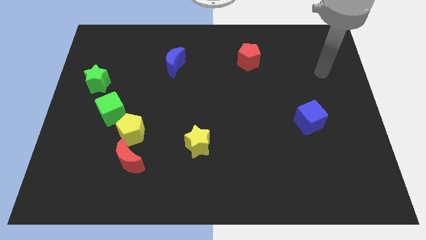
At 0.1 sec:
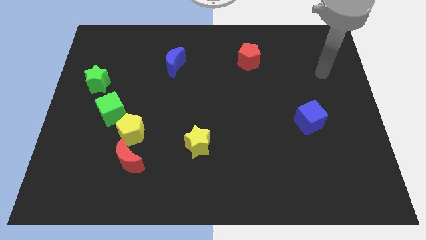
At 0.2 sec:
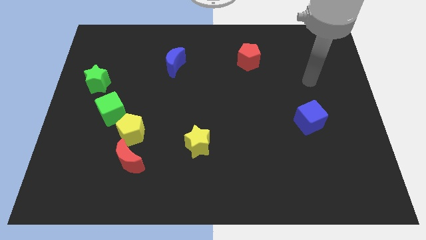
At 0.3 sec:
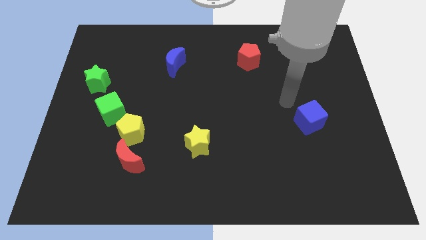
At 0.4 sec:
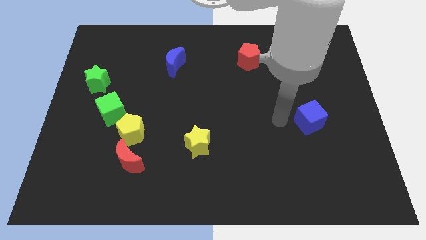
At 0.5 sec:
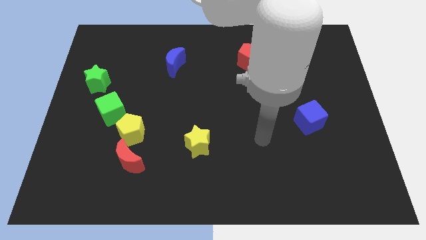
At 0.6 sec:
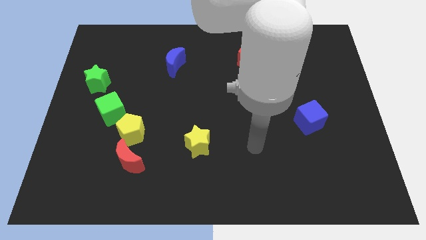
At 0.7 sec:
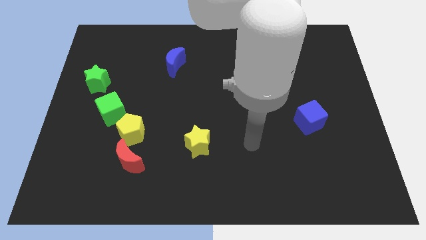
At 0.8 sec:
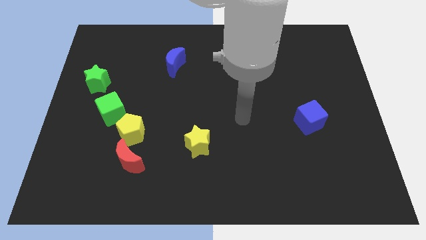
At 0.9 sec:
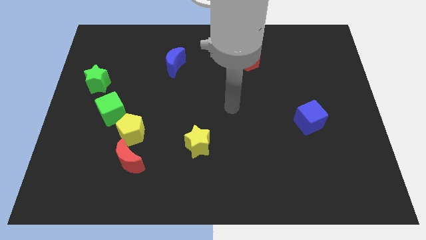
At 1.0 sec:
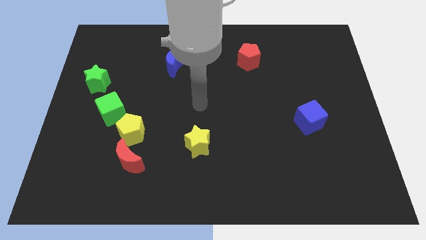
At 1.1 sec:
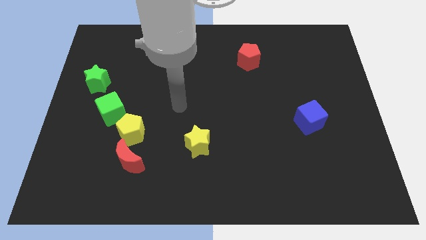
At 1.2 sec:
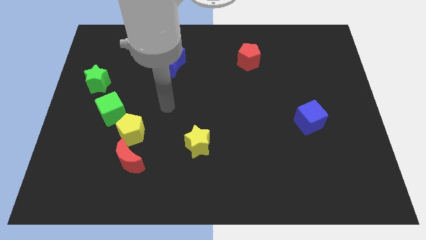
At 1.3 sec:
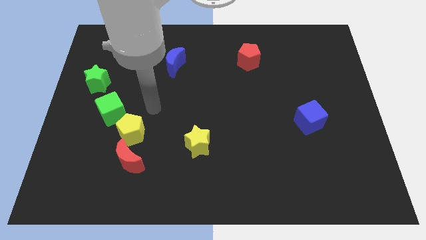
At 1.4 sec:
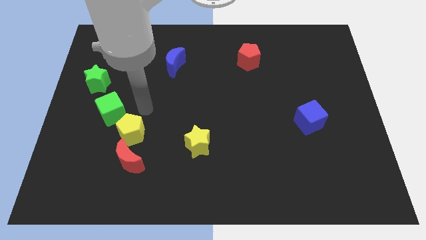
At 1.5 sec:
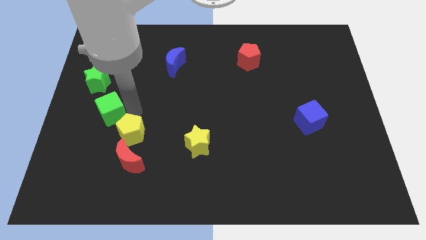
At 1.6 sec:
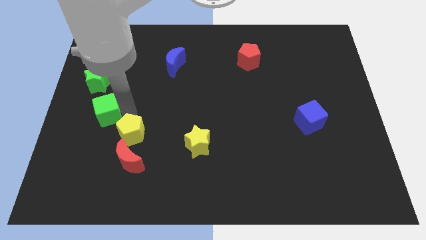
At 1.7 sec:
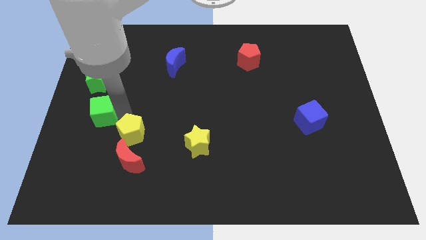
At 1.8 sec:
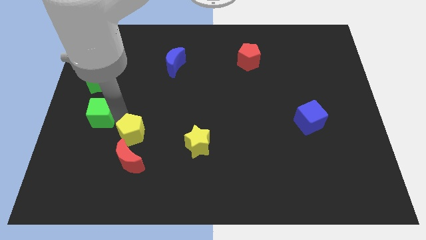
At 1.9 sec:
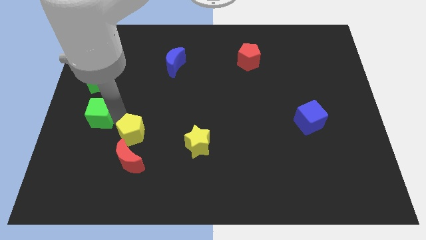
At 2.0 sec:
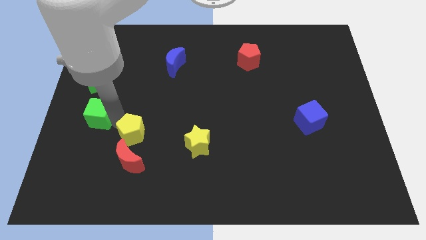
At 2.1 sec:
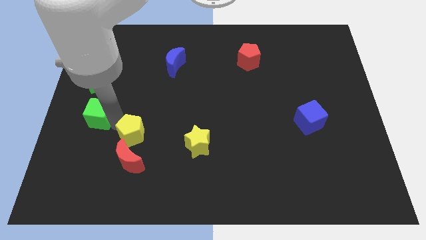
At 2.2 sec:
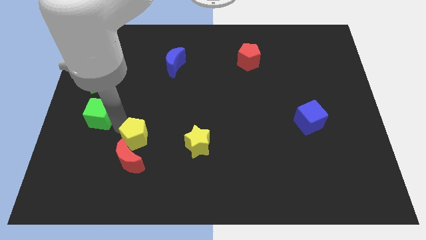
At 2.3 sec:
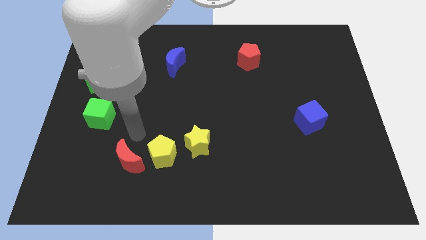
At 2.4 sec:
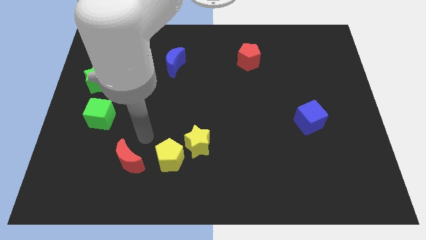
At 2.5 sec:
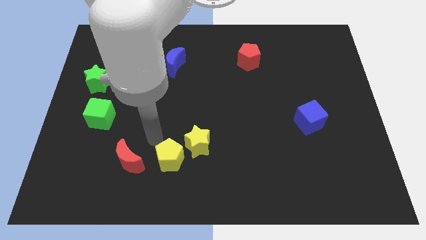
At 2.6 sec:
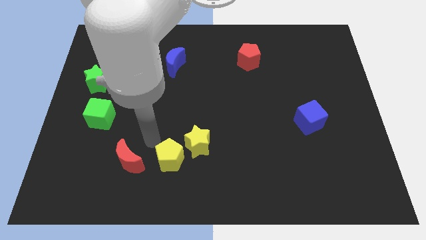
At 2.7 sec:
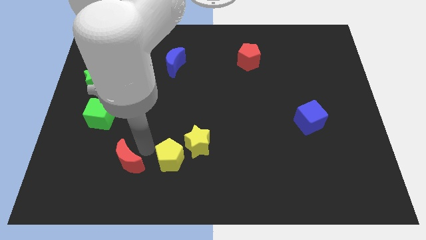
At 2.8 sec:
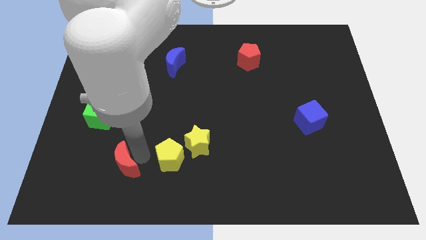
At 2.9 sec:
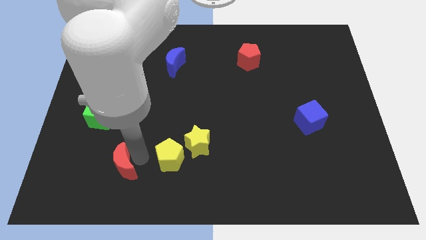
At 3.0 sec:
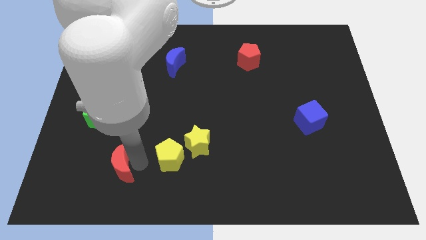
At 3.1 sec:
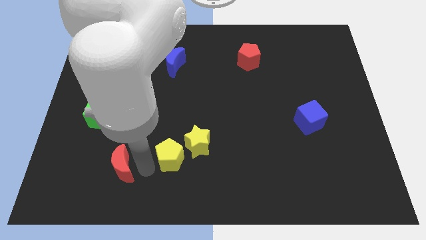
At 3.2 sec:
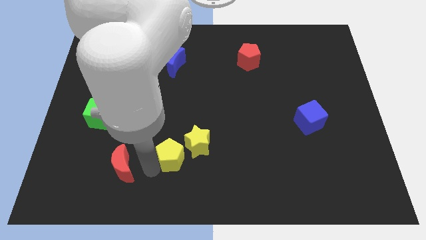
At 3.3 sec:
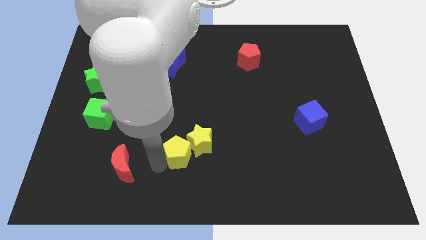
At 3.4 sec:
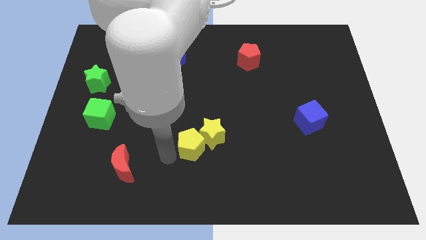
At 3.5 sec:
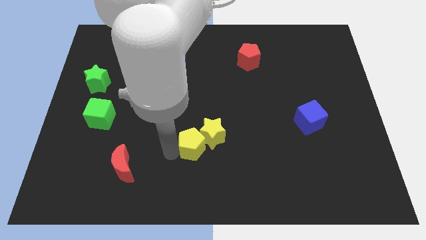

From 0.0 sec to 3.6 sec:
slide the yellow pentagon towards the yellow star

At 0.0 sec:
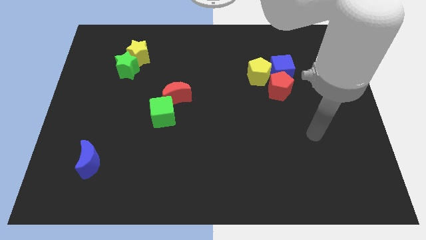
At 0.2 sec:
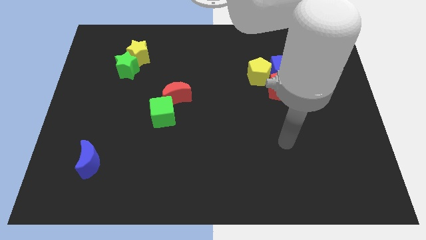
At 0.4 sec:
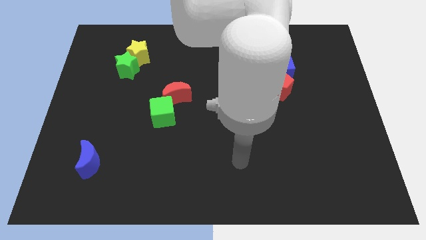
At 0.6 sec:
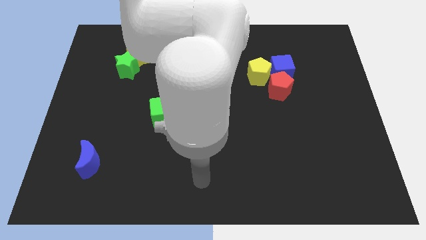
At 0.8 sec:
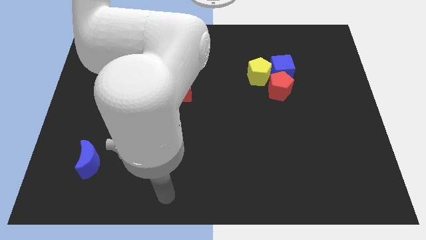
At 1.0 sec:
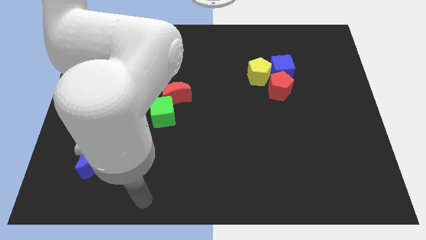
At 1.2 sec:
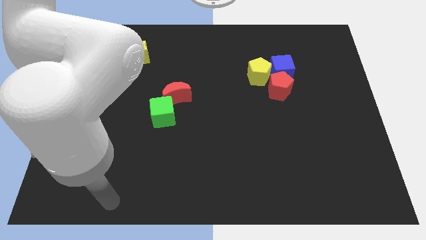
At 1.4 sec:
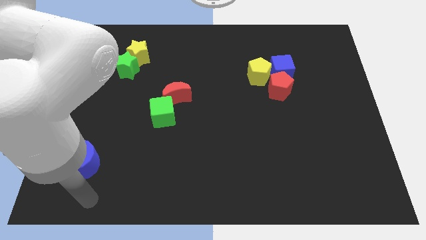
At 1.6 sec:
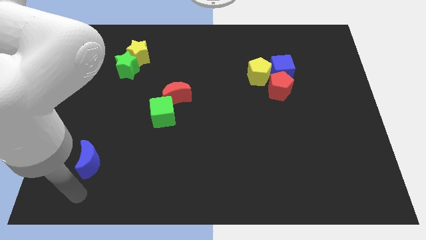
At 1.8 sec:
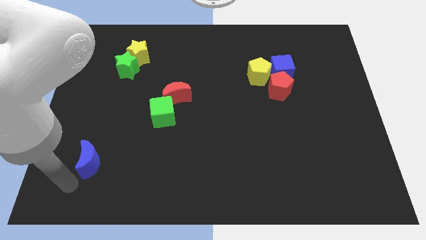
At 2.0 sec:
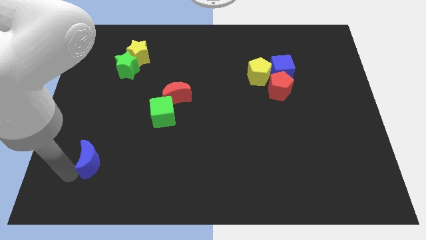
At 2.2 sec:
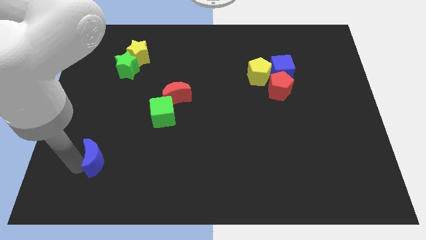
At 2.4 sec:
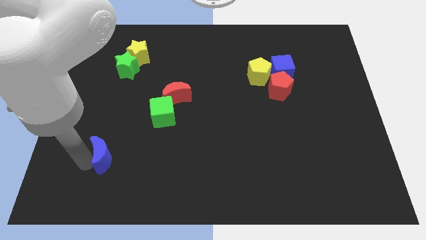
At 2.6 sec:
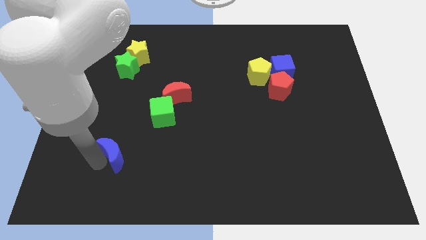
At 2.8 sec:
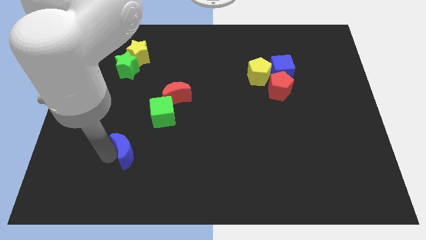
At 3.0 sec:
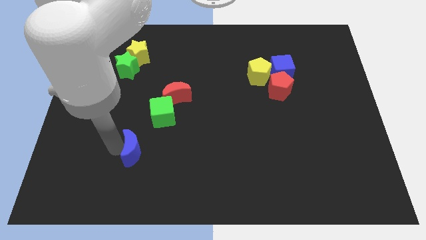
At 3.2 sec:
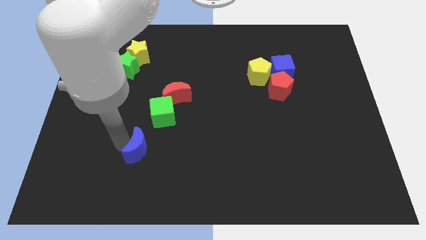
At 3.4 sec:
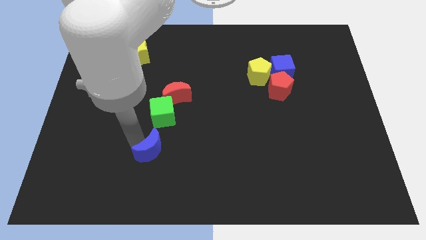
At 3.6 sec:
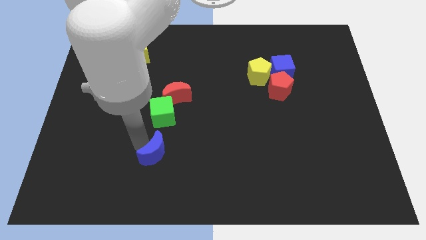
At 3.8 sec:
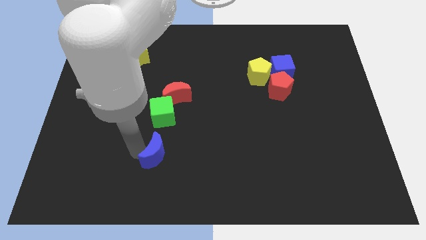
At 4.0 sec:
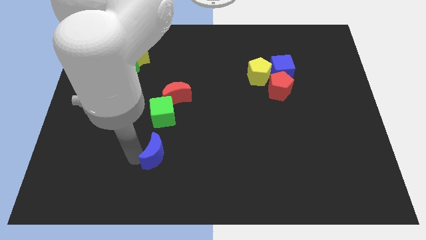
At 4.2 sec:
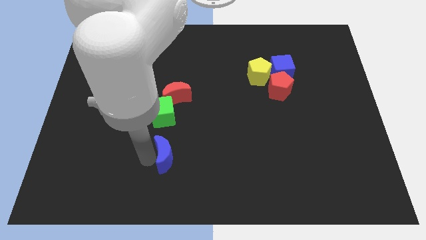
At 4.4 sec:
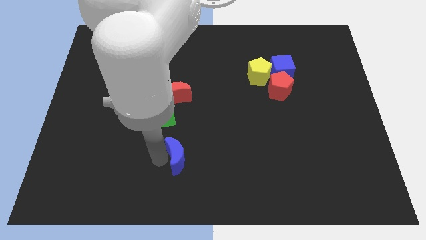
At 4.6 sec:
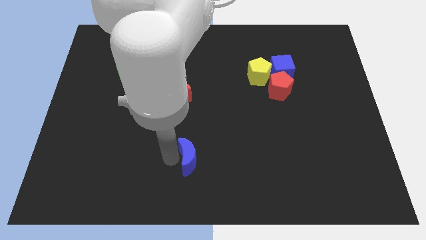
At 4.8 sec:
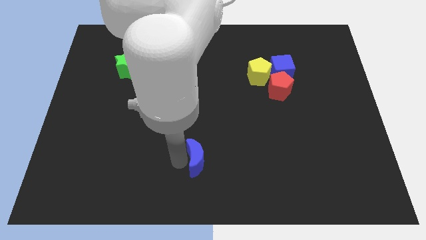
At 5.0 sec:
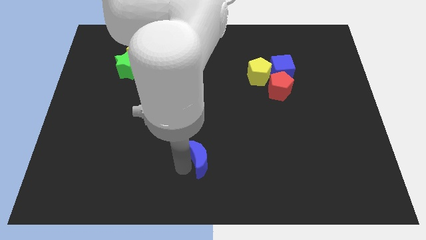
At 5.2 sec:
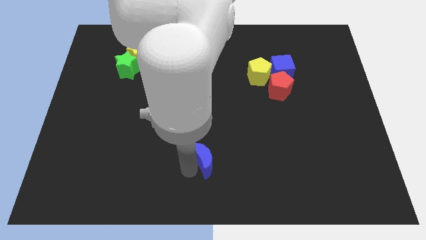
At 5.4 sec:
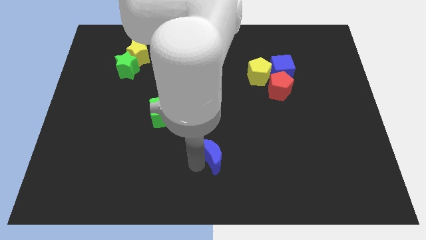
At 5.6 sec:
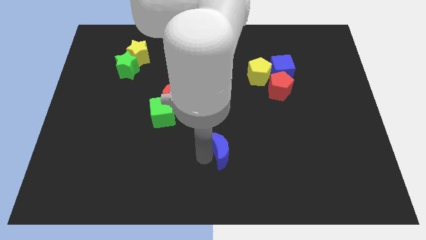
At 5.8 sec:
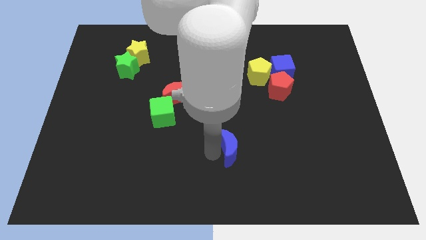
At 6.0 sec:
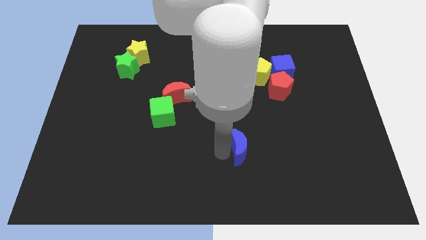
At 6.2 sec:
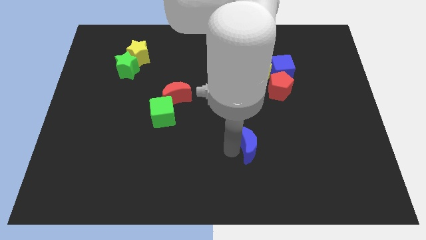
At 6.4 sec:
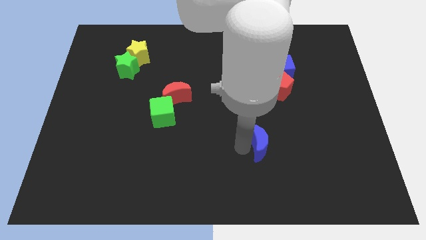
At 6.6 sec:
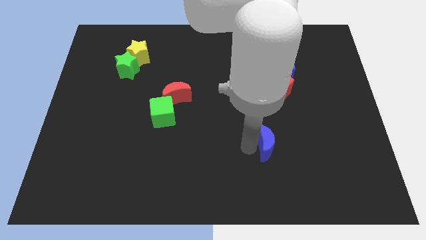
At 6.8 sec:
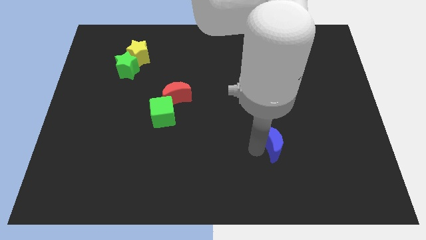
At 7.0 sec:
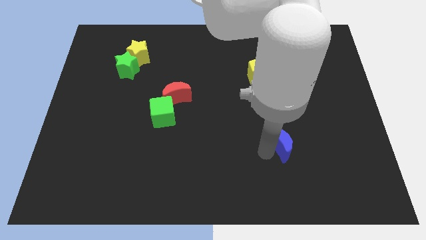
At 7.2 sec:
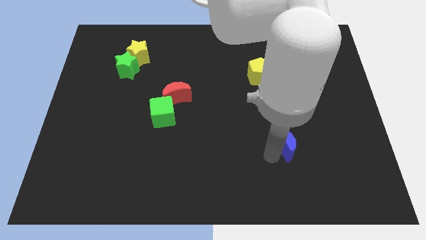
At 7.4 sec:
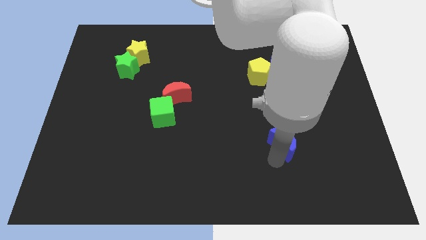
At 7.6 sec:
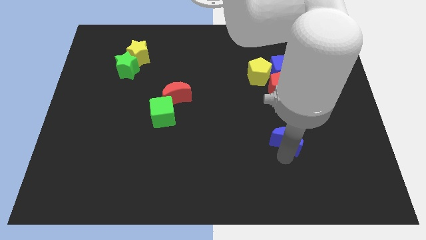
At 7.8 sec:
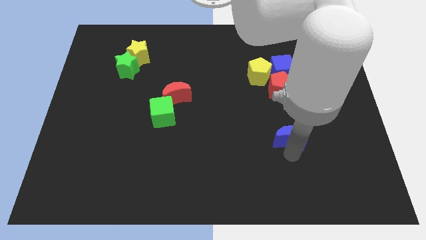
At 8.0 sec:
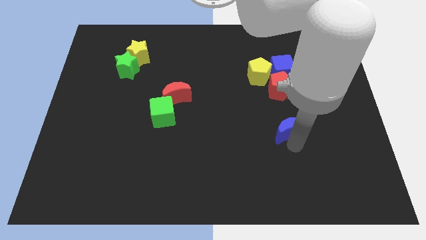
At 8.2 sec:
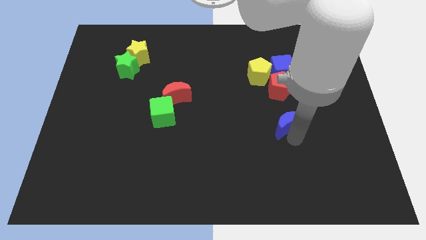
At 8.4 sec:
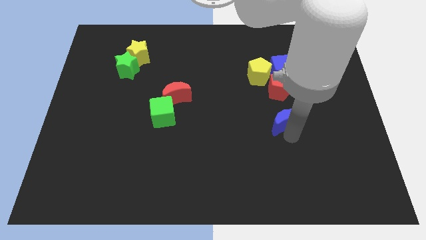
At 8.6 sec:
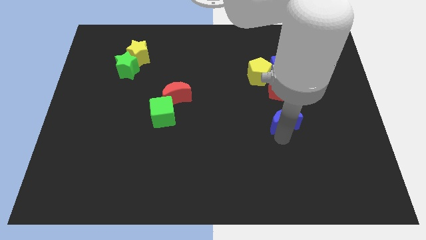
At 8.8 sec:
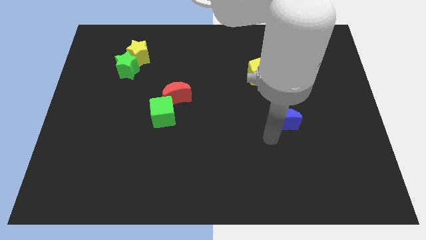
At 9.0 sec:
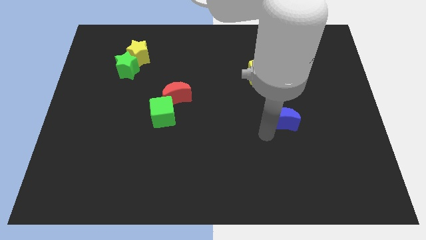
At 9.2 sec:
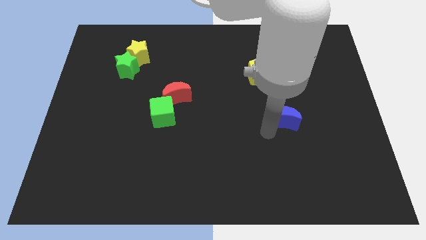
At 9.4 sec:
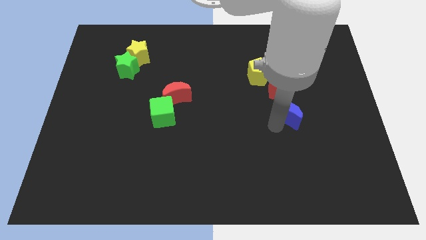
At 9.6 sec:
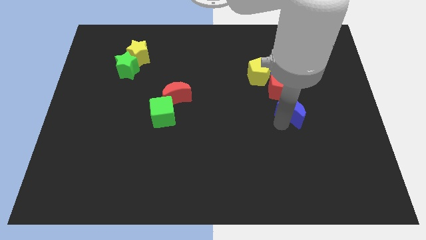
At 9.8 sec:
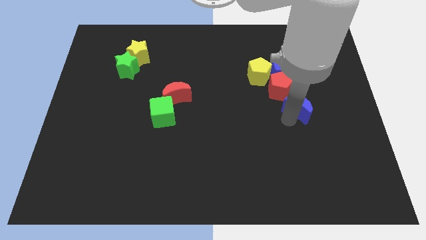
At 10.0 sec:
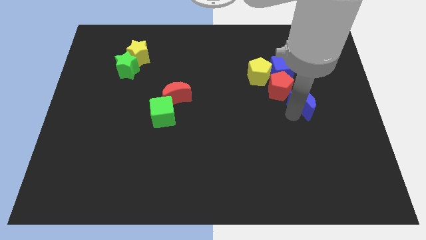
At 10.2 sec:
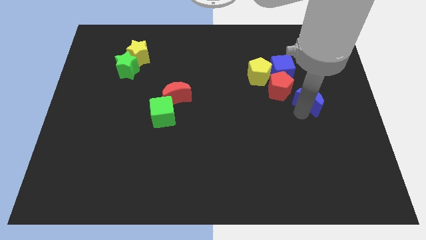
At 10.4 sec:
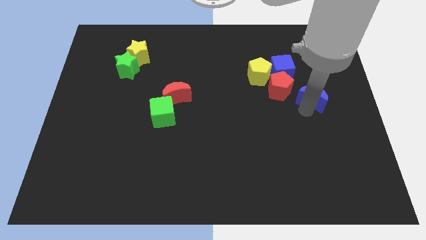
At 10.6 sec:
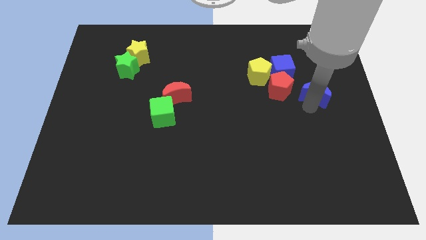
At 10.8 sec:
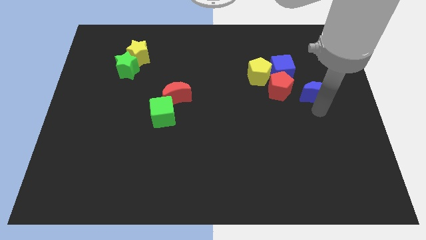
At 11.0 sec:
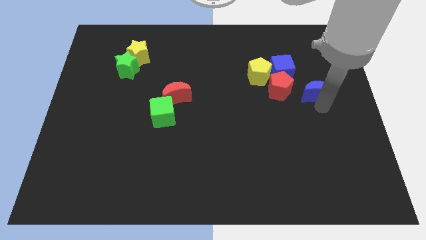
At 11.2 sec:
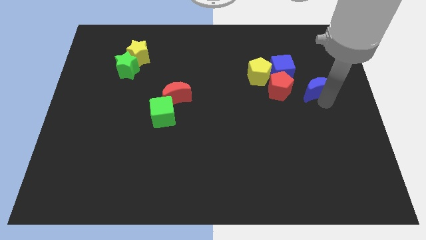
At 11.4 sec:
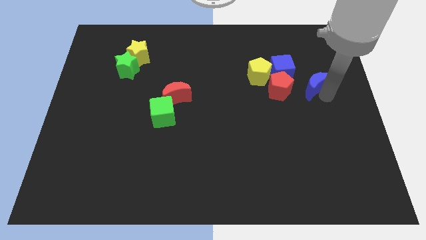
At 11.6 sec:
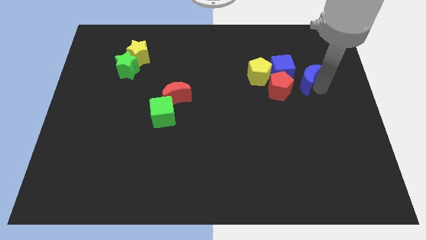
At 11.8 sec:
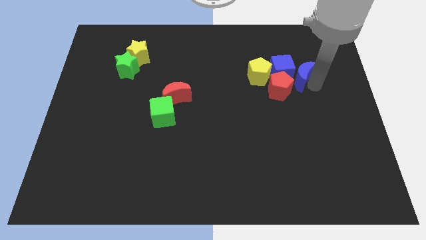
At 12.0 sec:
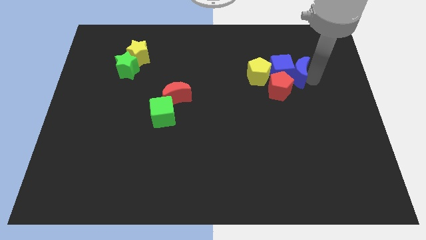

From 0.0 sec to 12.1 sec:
slide the blue moon to the blue cube
